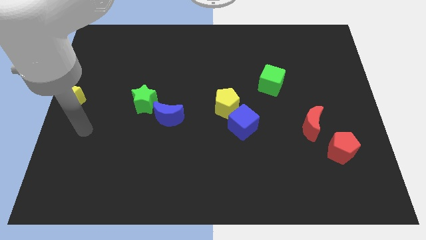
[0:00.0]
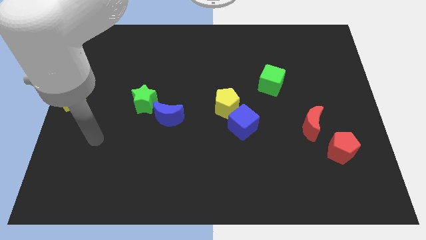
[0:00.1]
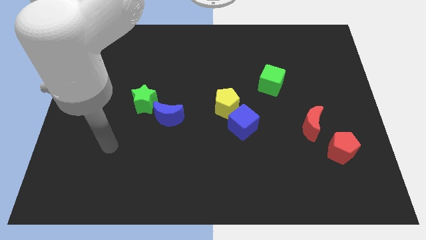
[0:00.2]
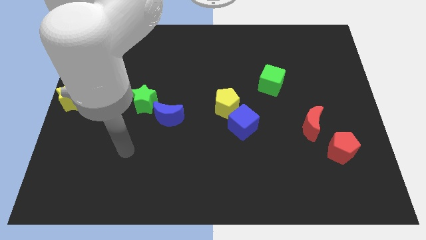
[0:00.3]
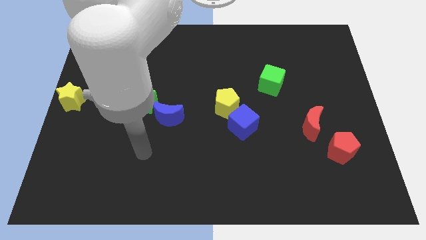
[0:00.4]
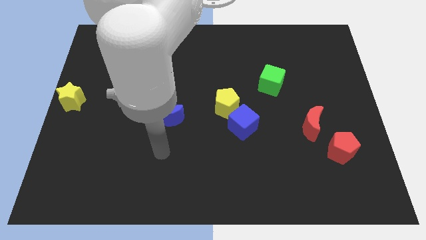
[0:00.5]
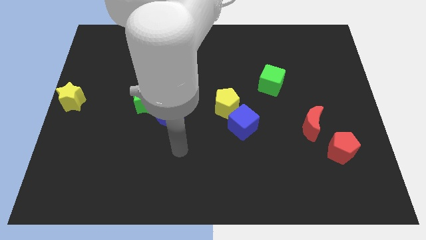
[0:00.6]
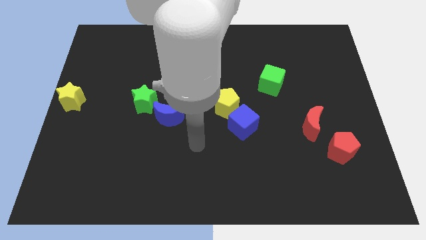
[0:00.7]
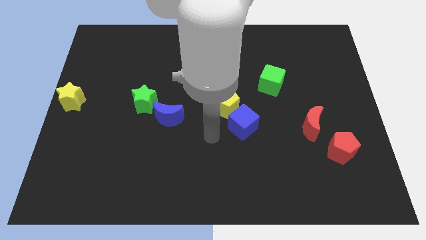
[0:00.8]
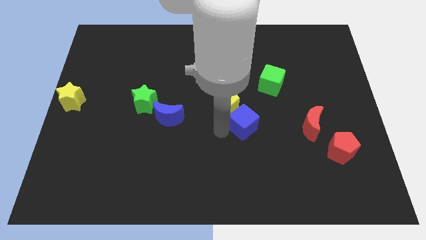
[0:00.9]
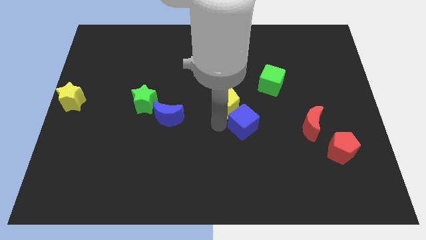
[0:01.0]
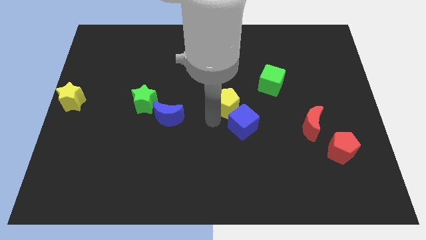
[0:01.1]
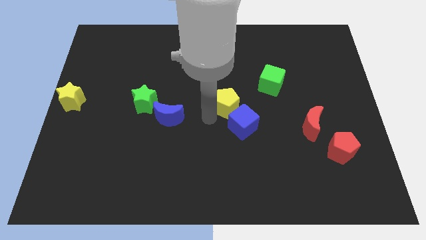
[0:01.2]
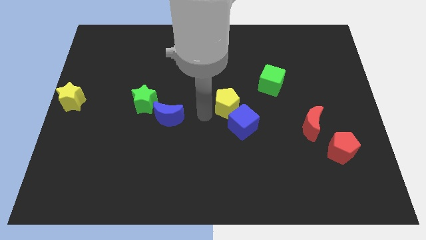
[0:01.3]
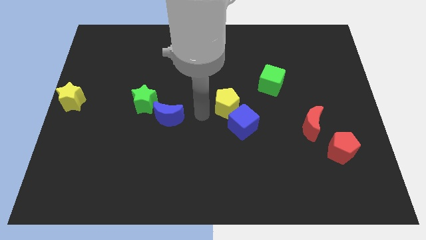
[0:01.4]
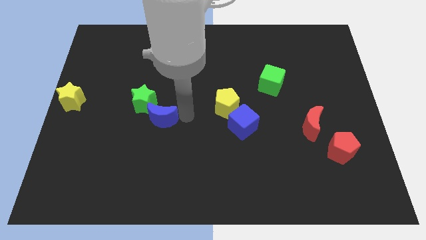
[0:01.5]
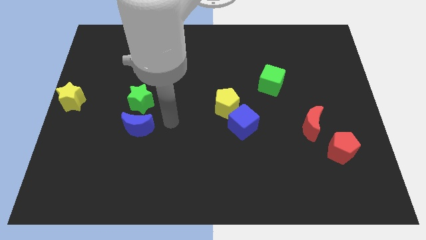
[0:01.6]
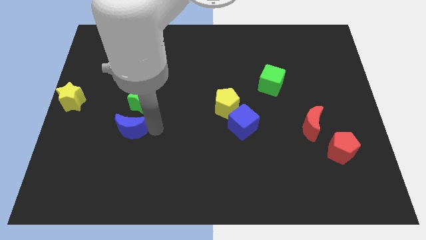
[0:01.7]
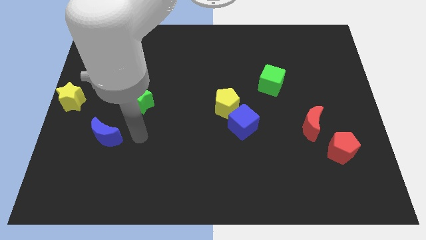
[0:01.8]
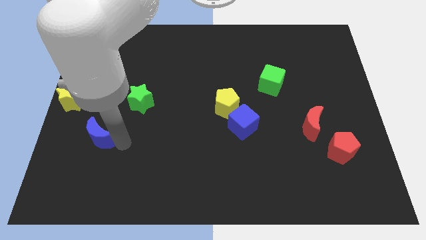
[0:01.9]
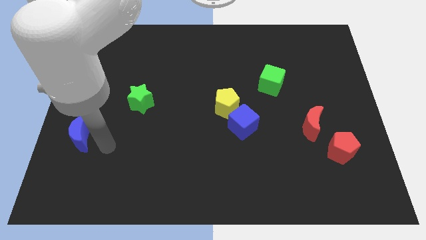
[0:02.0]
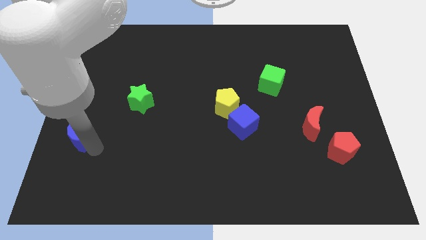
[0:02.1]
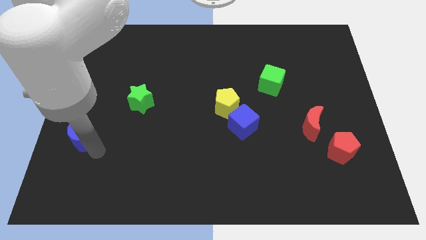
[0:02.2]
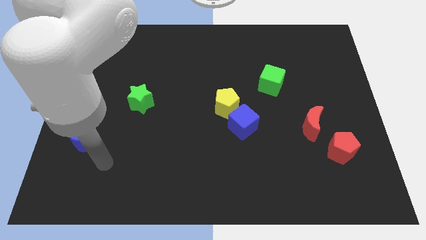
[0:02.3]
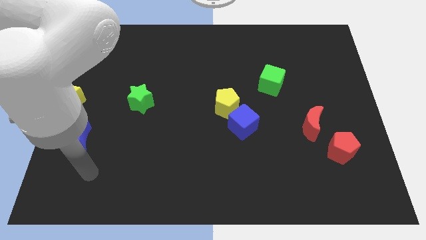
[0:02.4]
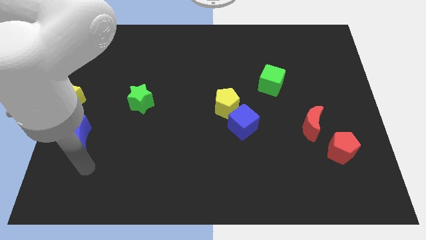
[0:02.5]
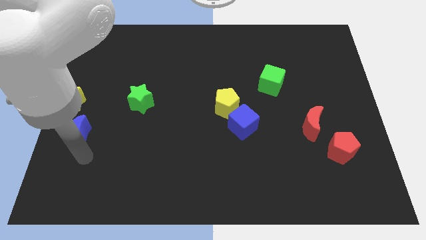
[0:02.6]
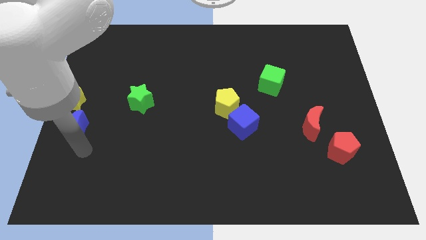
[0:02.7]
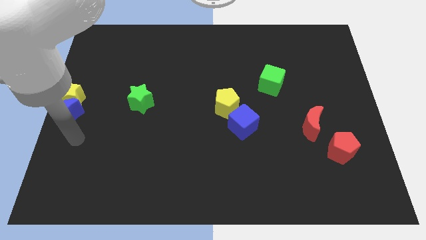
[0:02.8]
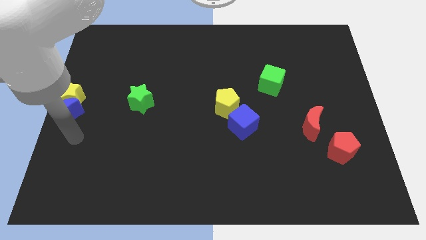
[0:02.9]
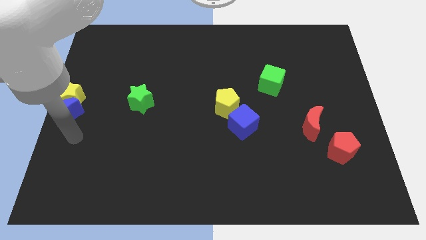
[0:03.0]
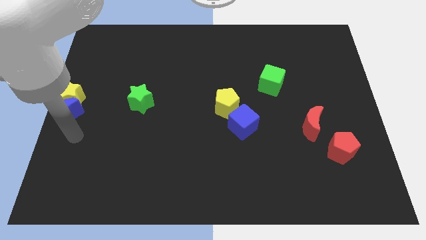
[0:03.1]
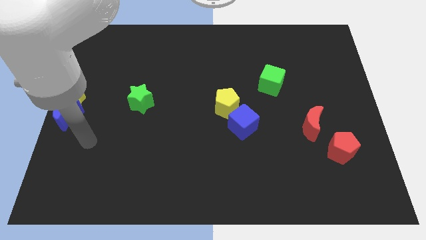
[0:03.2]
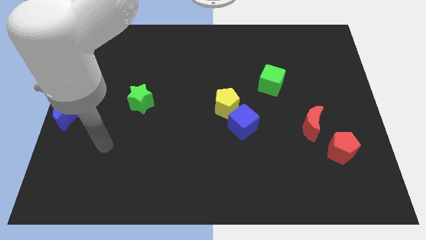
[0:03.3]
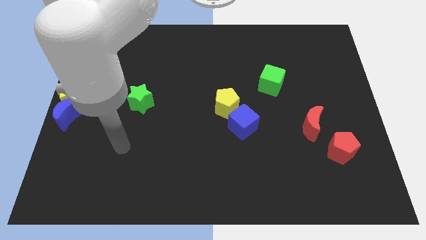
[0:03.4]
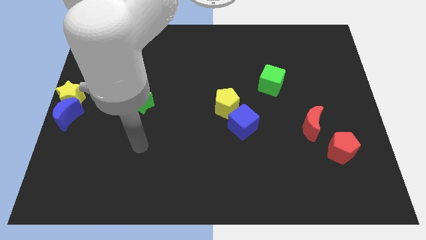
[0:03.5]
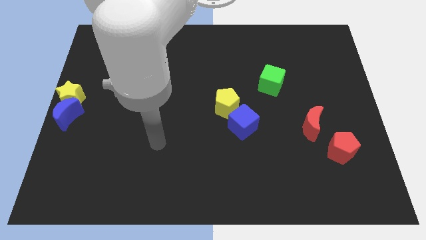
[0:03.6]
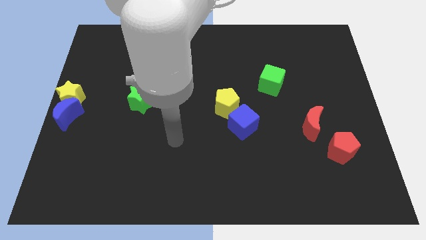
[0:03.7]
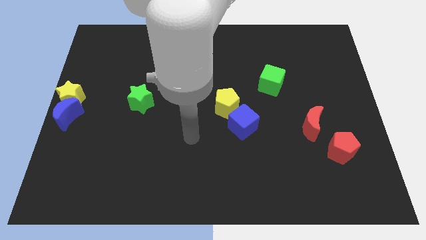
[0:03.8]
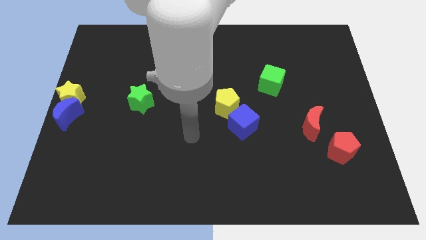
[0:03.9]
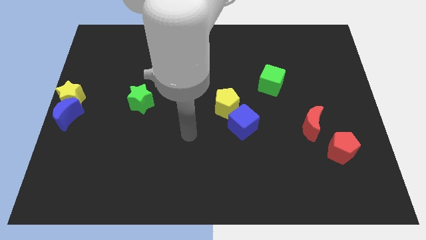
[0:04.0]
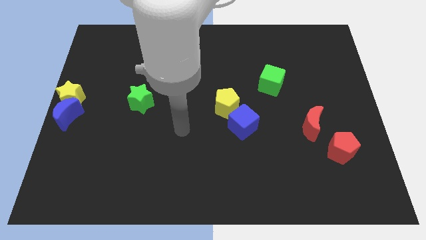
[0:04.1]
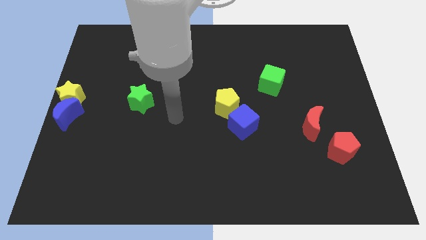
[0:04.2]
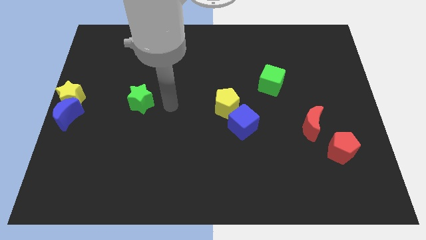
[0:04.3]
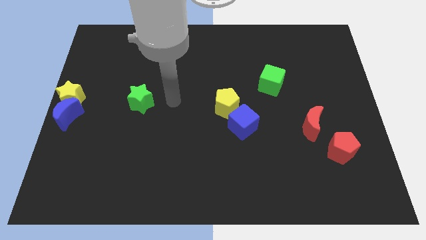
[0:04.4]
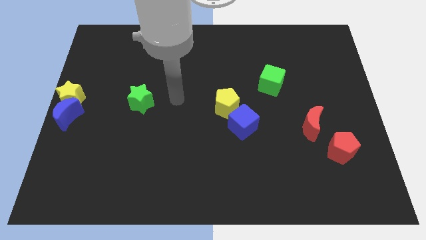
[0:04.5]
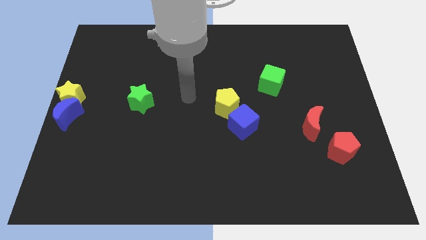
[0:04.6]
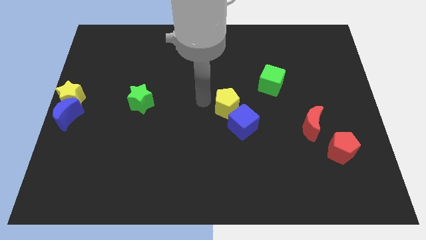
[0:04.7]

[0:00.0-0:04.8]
push the blue moon towards the center left of the board

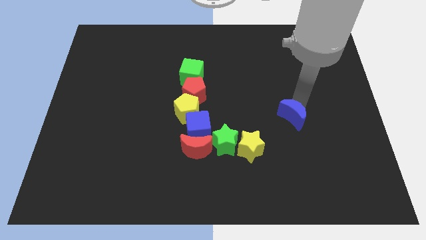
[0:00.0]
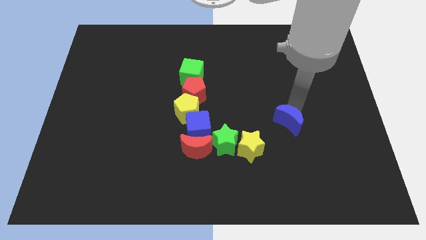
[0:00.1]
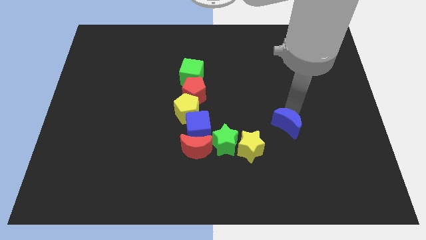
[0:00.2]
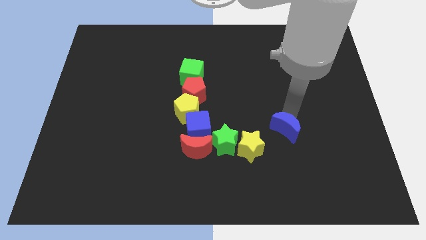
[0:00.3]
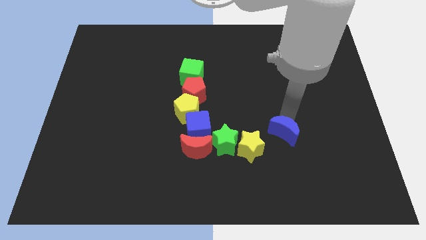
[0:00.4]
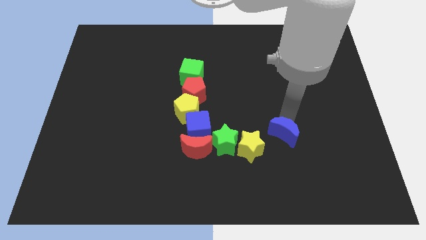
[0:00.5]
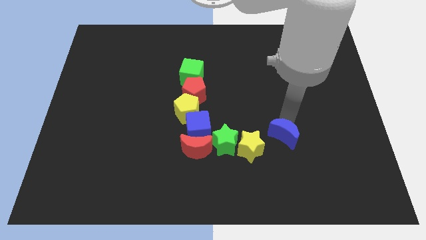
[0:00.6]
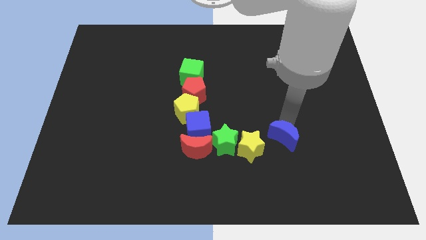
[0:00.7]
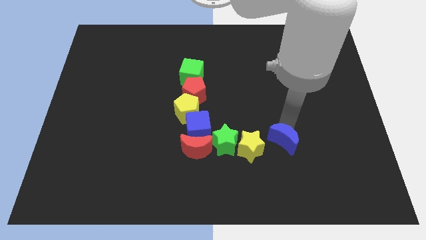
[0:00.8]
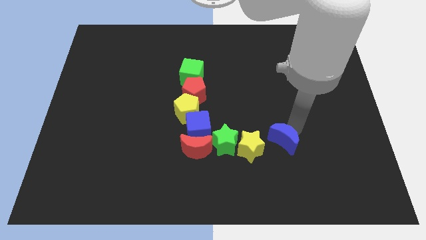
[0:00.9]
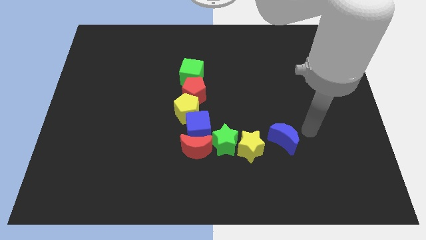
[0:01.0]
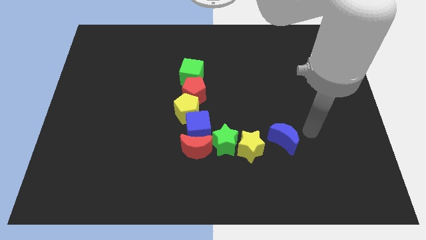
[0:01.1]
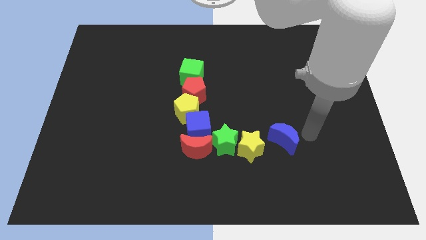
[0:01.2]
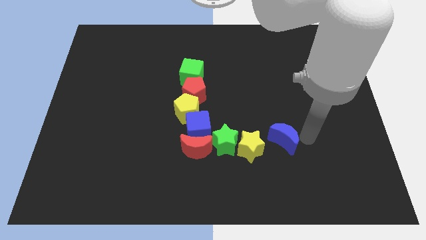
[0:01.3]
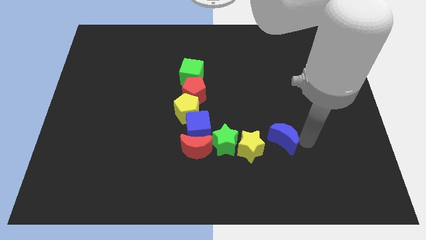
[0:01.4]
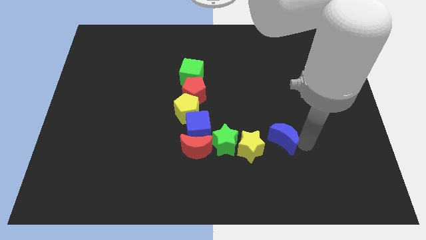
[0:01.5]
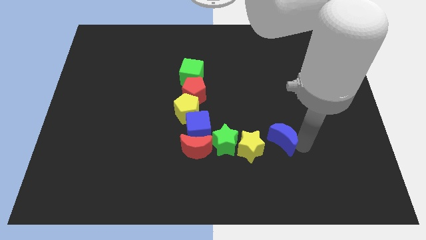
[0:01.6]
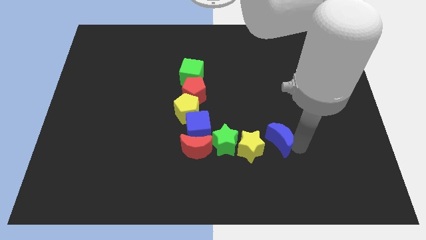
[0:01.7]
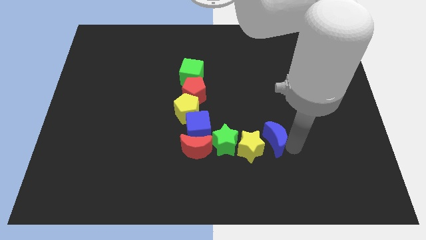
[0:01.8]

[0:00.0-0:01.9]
move the blue crescent to the right of the yellow star

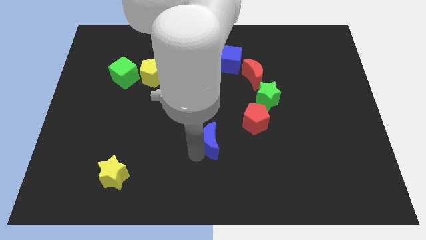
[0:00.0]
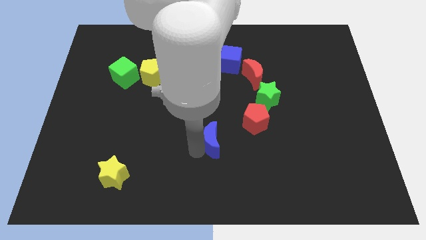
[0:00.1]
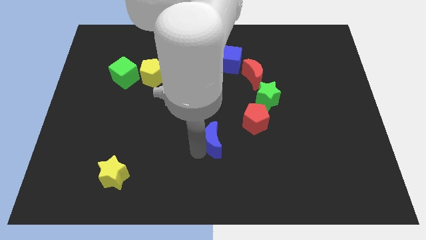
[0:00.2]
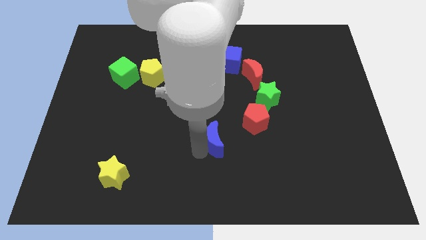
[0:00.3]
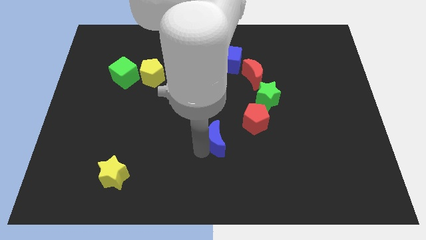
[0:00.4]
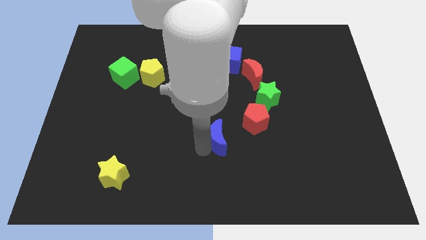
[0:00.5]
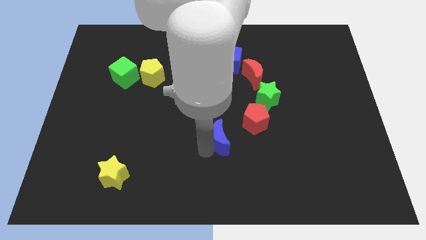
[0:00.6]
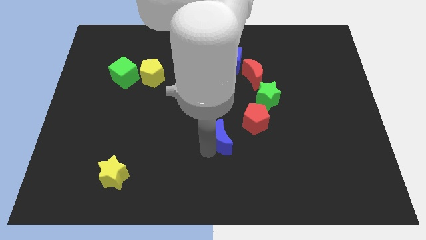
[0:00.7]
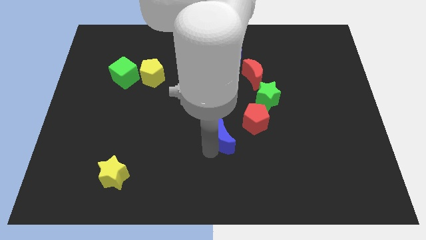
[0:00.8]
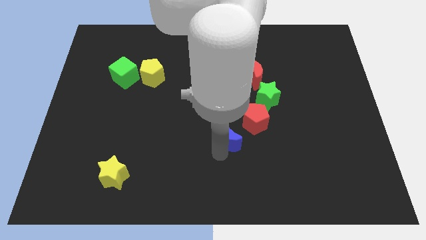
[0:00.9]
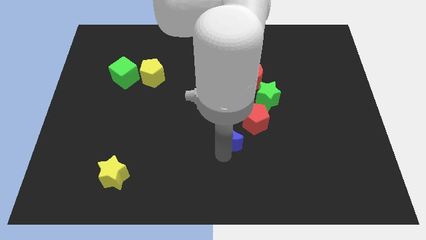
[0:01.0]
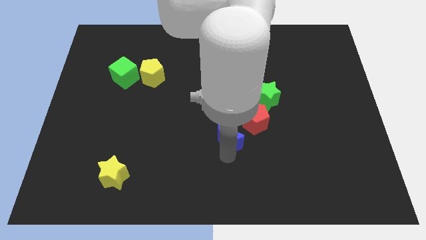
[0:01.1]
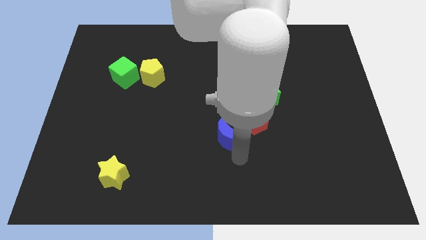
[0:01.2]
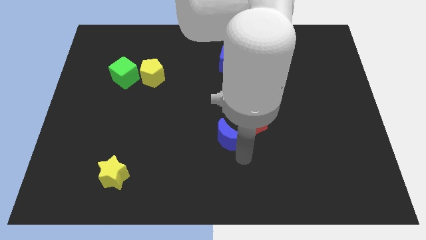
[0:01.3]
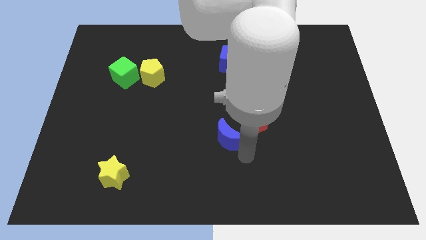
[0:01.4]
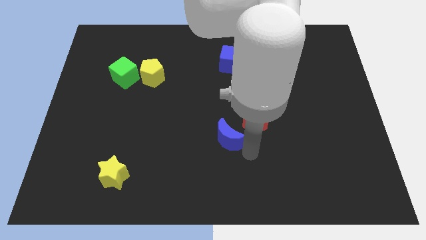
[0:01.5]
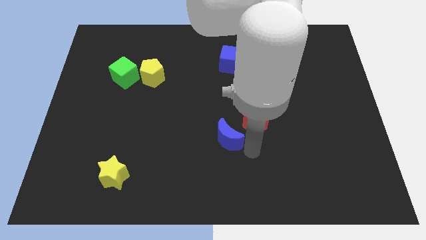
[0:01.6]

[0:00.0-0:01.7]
move blue moon towards red pentagon

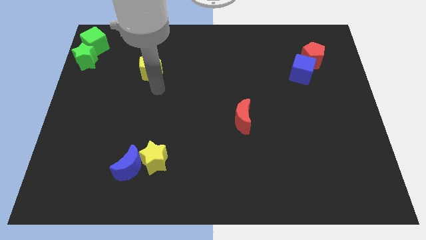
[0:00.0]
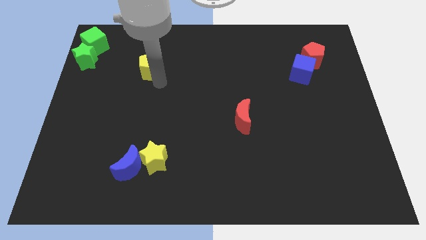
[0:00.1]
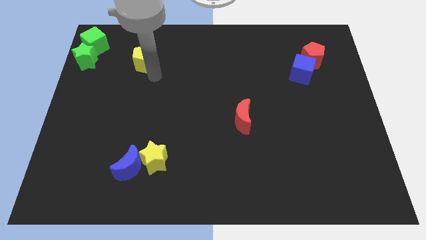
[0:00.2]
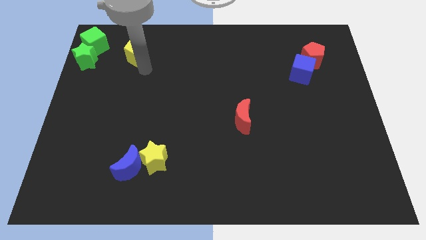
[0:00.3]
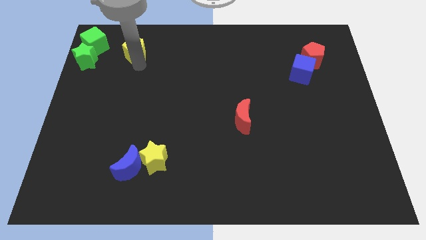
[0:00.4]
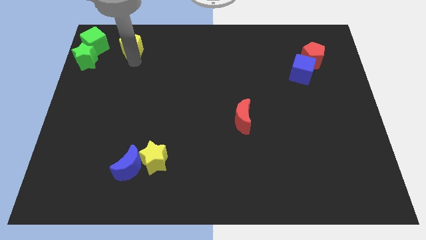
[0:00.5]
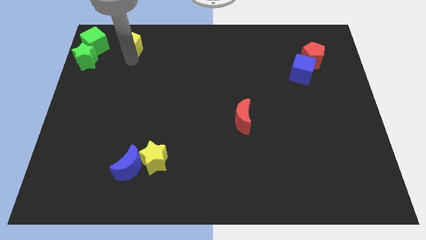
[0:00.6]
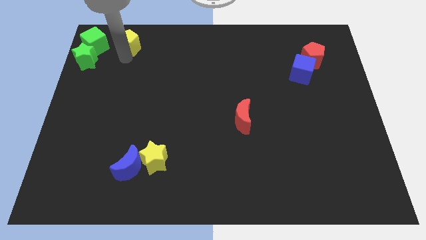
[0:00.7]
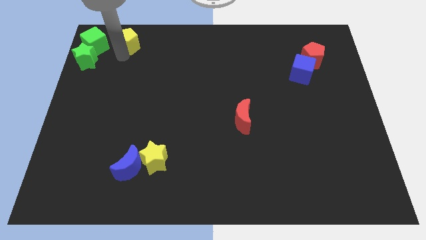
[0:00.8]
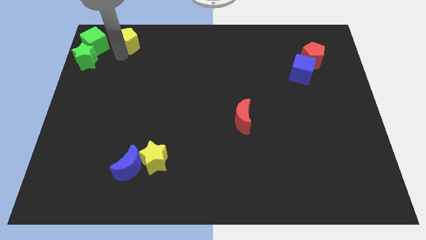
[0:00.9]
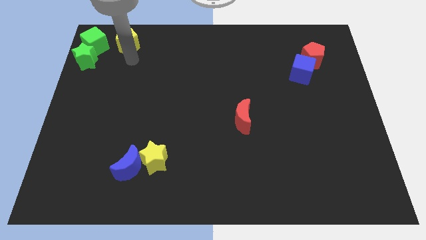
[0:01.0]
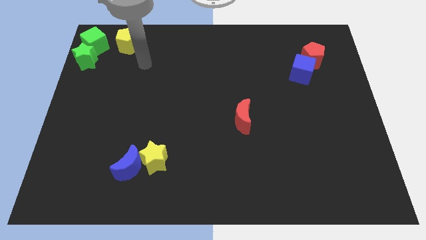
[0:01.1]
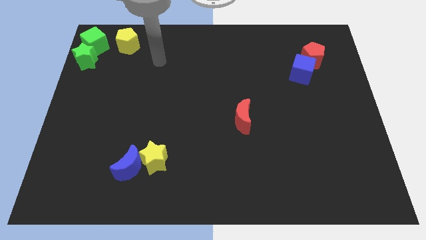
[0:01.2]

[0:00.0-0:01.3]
place the yellow pentagon to the right side of the green cube
